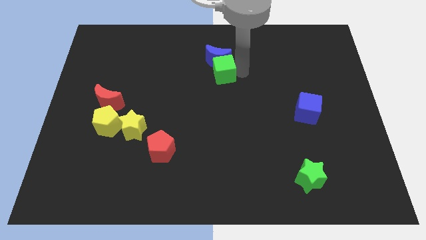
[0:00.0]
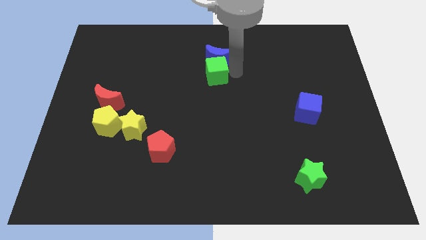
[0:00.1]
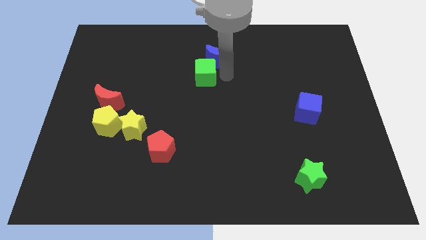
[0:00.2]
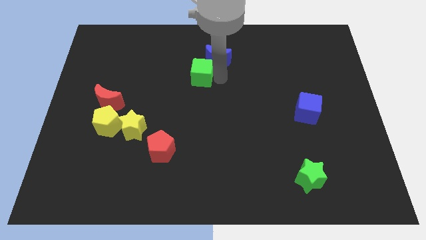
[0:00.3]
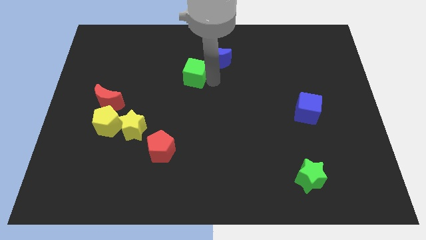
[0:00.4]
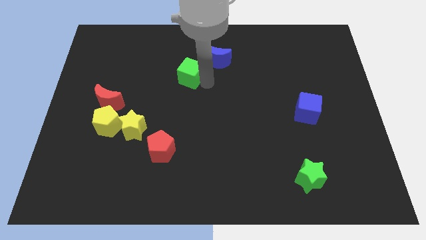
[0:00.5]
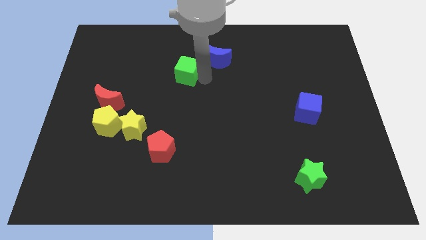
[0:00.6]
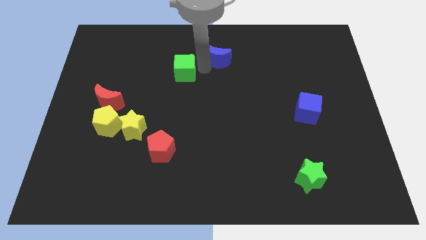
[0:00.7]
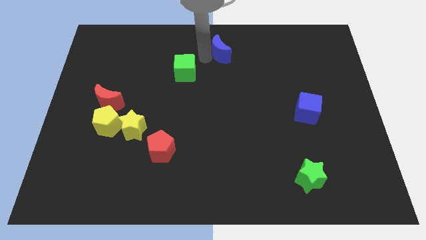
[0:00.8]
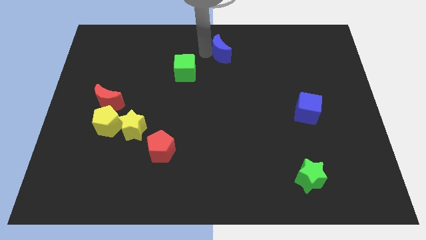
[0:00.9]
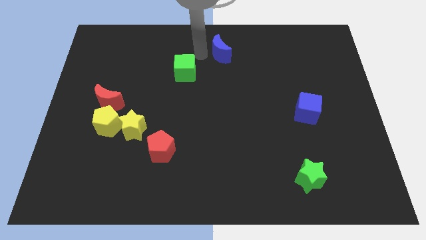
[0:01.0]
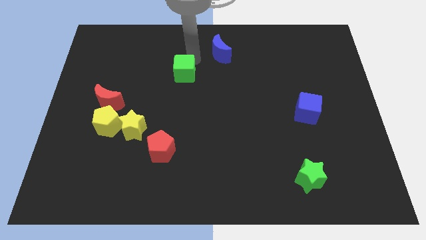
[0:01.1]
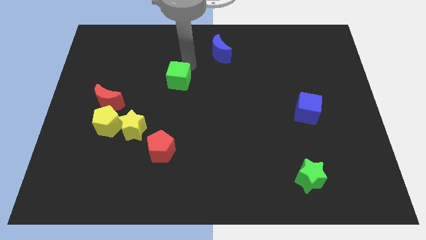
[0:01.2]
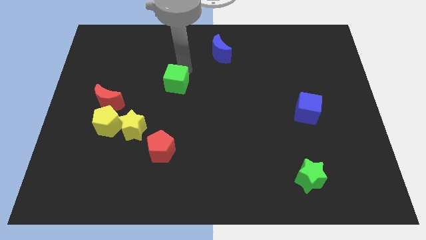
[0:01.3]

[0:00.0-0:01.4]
push green cube away from the blue moon

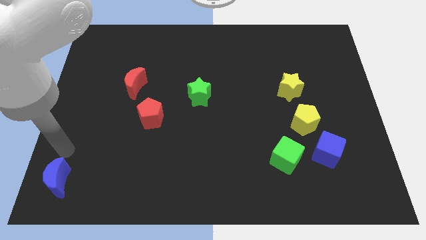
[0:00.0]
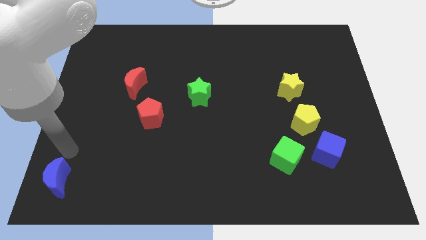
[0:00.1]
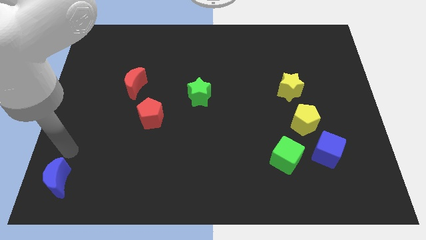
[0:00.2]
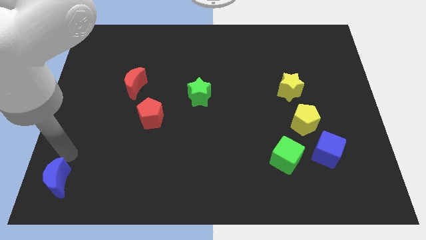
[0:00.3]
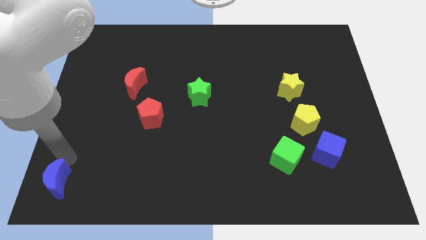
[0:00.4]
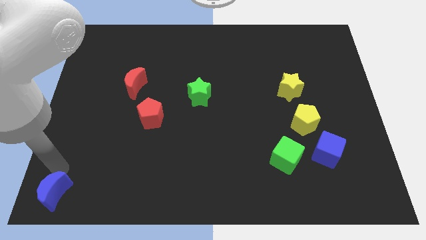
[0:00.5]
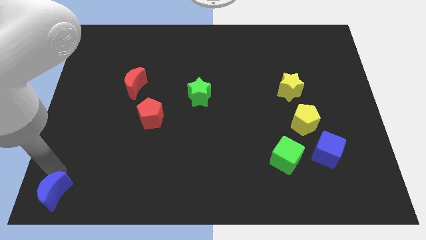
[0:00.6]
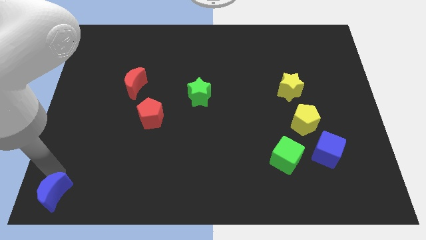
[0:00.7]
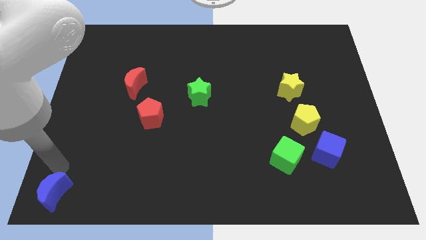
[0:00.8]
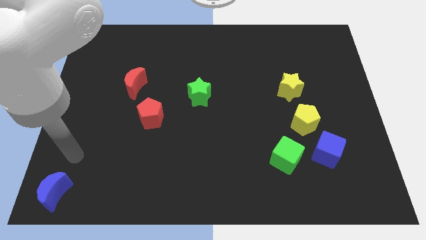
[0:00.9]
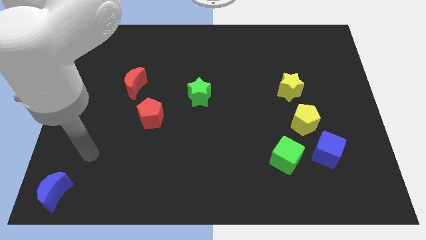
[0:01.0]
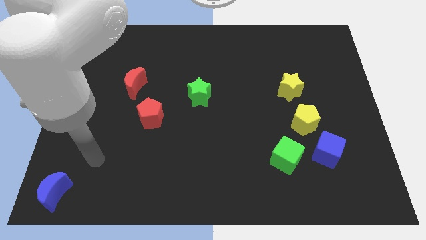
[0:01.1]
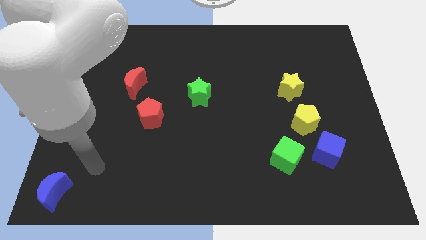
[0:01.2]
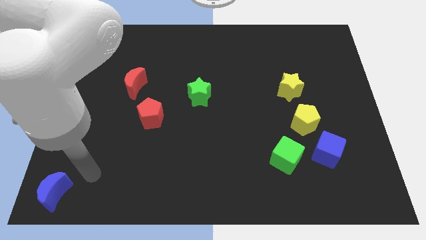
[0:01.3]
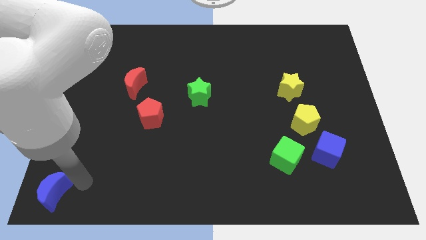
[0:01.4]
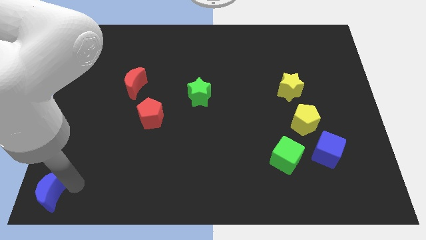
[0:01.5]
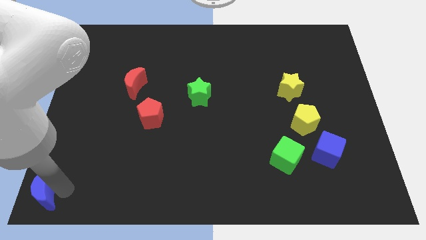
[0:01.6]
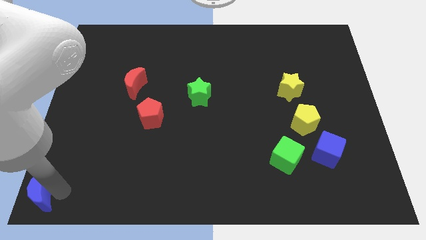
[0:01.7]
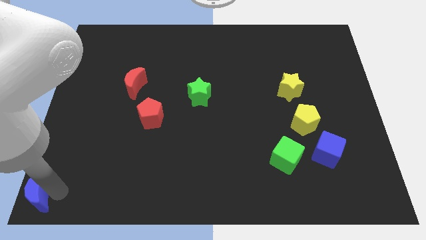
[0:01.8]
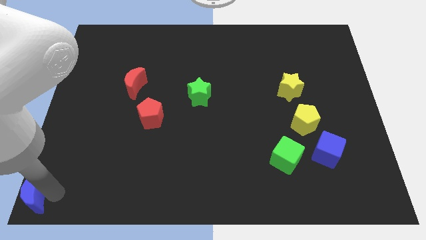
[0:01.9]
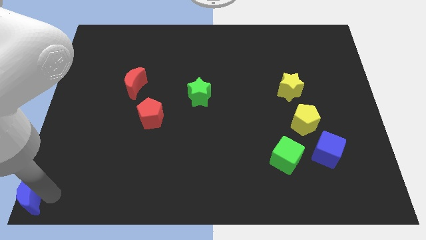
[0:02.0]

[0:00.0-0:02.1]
place blue moon in the bottom left corner

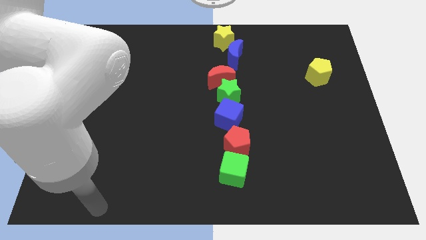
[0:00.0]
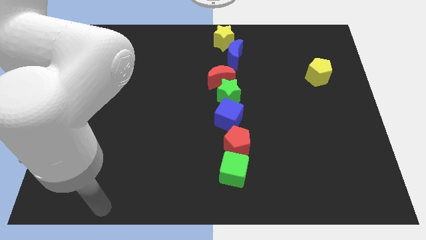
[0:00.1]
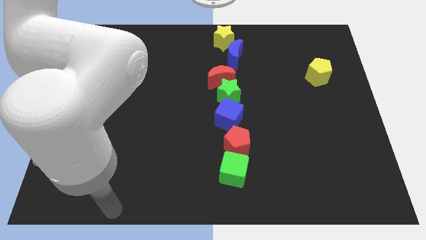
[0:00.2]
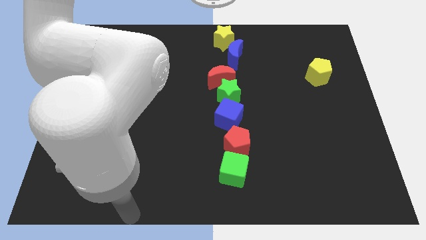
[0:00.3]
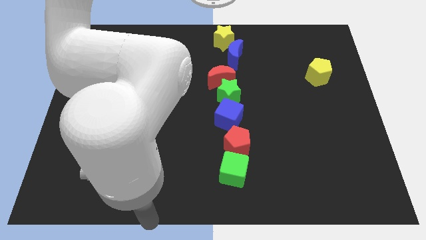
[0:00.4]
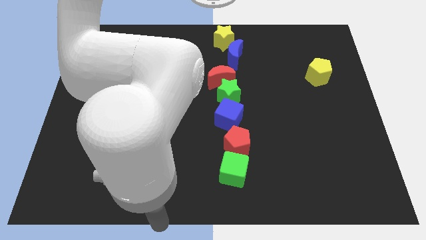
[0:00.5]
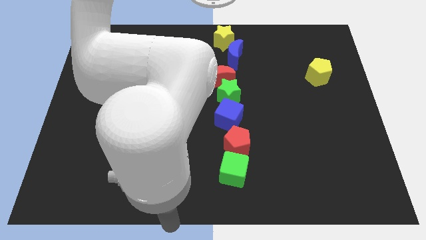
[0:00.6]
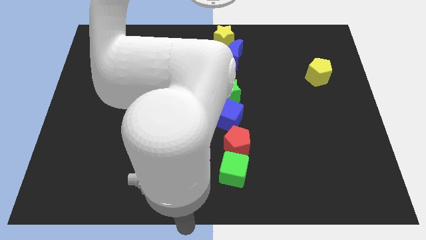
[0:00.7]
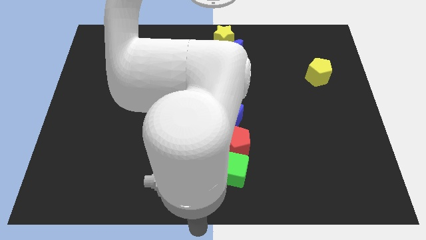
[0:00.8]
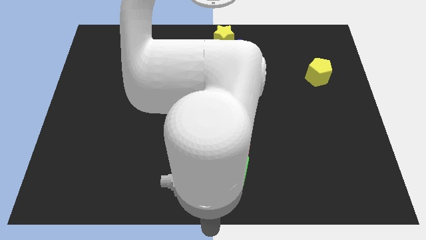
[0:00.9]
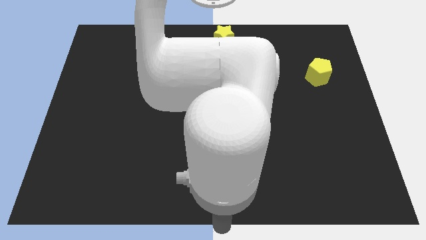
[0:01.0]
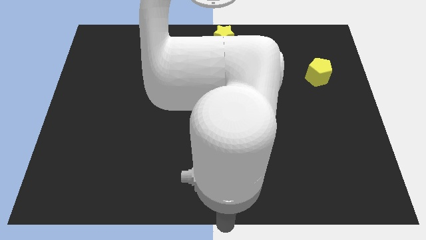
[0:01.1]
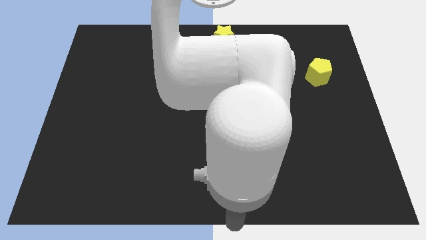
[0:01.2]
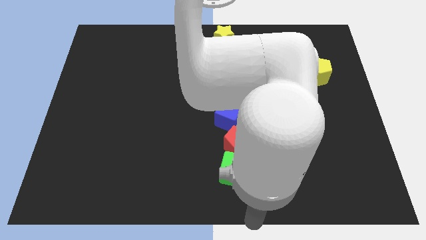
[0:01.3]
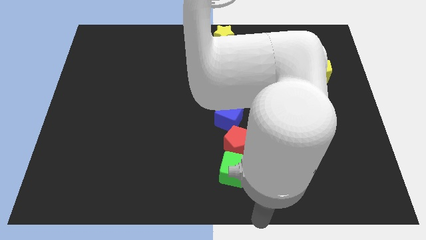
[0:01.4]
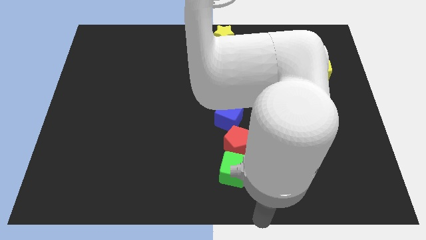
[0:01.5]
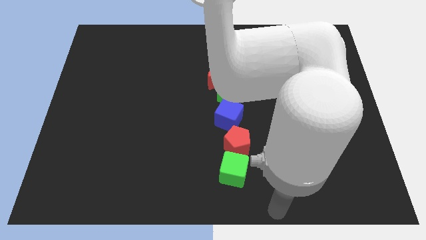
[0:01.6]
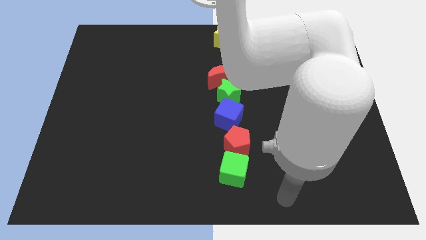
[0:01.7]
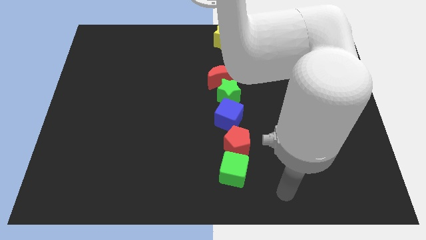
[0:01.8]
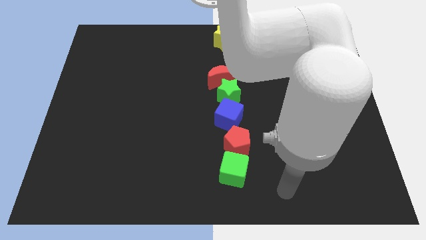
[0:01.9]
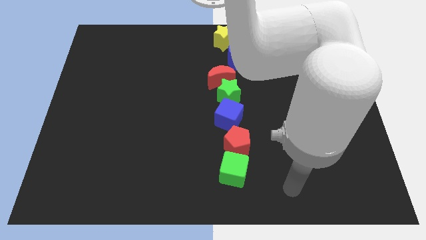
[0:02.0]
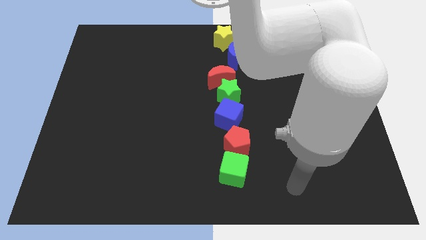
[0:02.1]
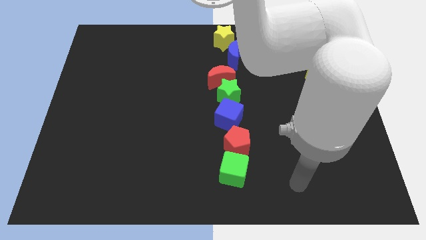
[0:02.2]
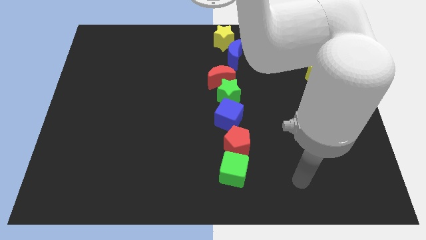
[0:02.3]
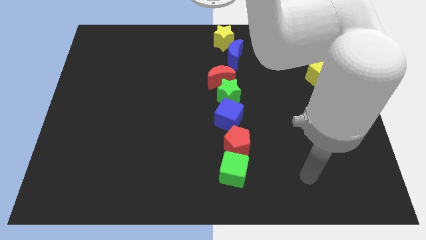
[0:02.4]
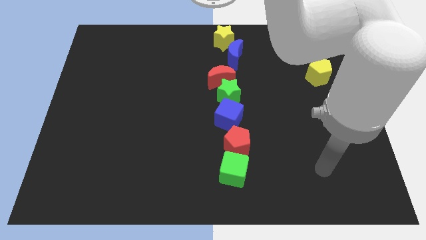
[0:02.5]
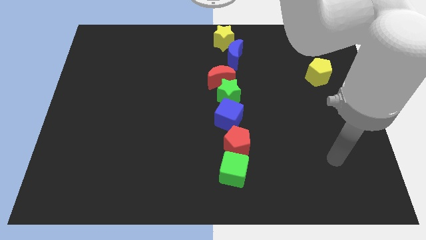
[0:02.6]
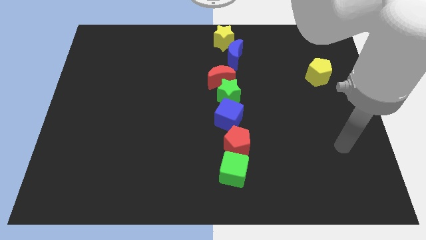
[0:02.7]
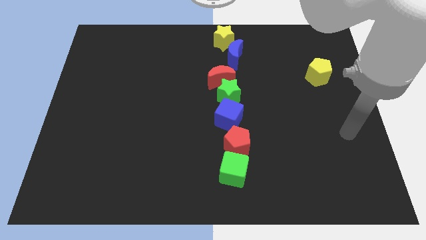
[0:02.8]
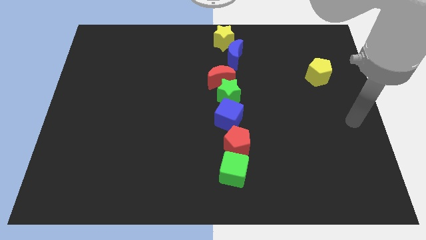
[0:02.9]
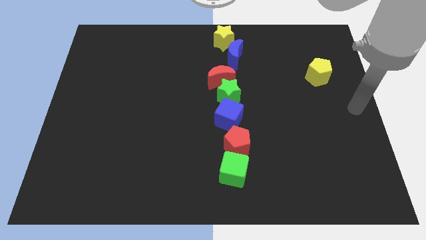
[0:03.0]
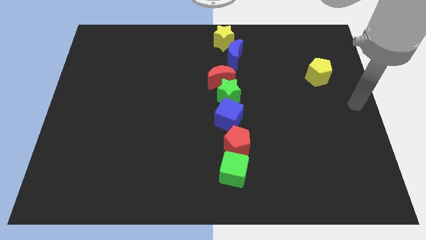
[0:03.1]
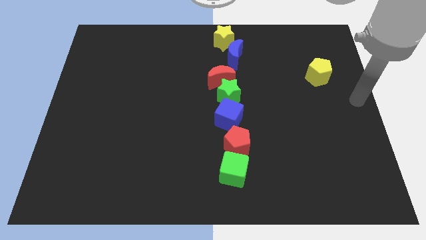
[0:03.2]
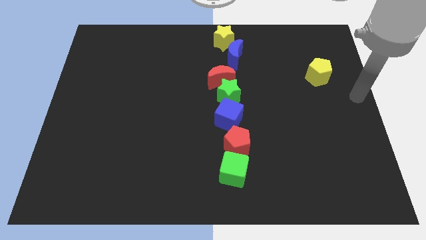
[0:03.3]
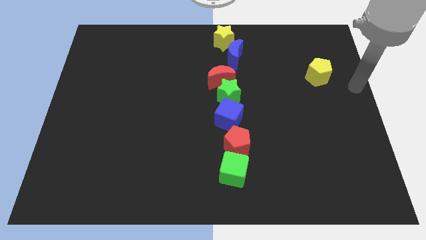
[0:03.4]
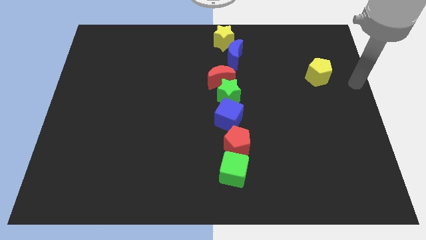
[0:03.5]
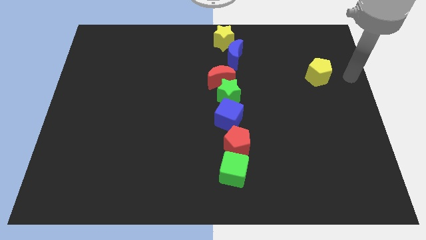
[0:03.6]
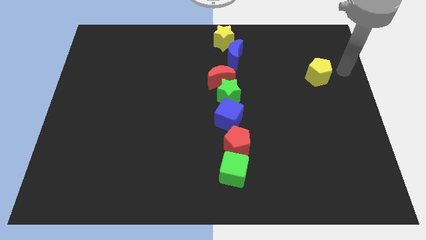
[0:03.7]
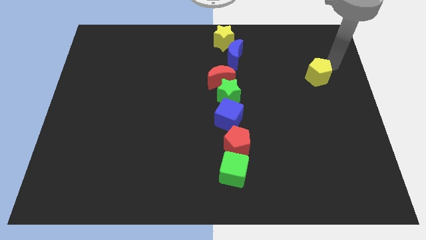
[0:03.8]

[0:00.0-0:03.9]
move your arm at the top right of the yellow pentagon

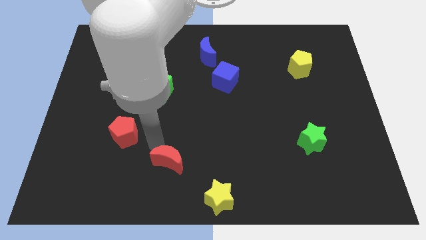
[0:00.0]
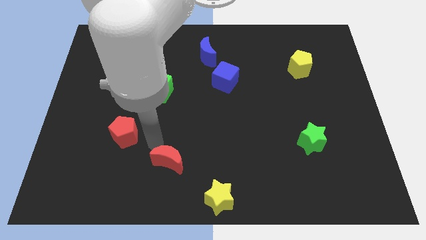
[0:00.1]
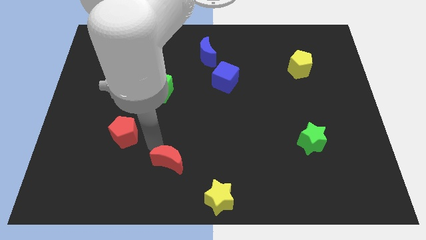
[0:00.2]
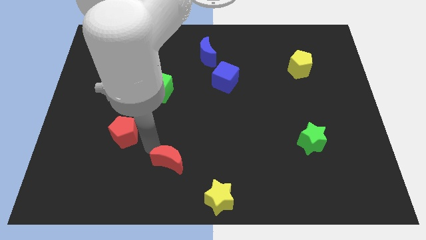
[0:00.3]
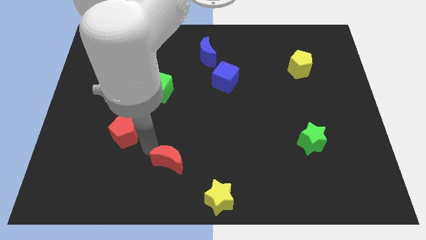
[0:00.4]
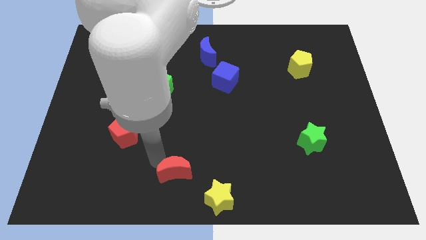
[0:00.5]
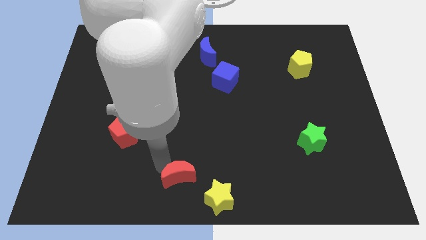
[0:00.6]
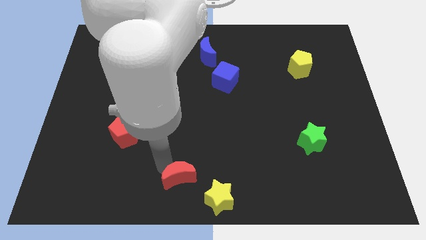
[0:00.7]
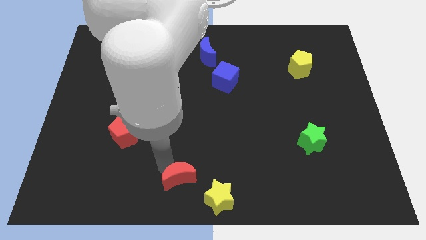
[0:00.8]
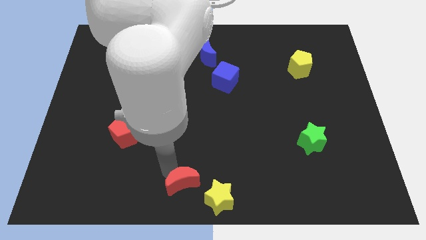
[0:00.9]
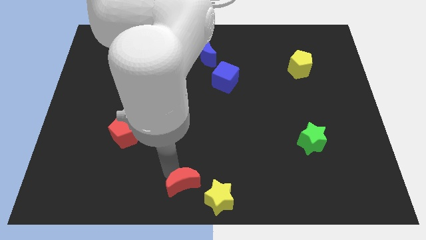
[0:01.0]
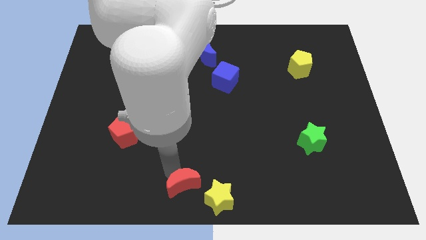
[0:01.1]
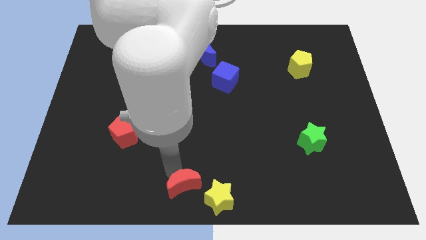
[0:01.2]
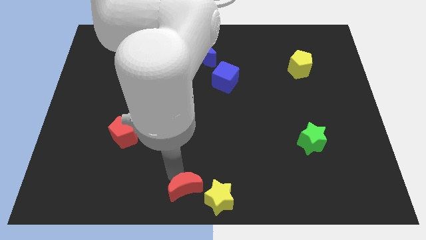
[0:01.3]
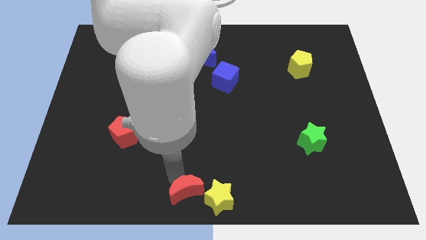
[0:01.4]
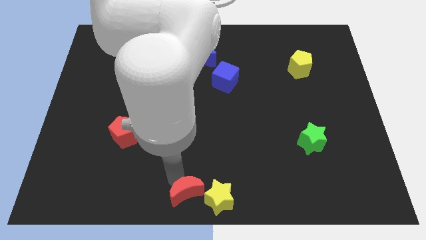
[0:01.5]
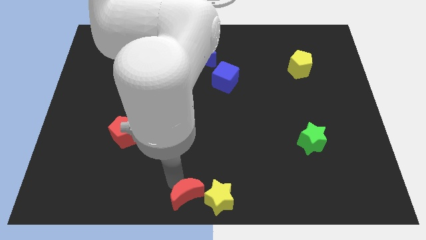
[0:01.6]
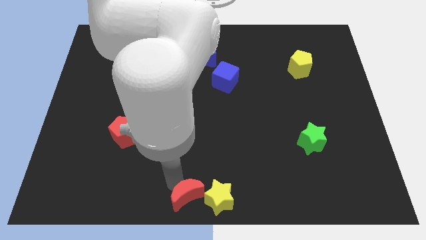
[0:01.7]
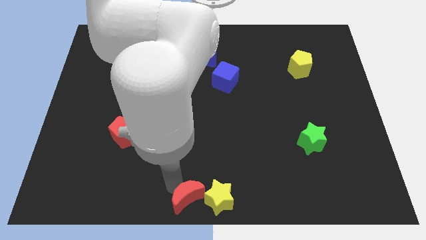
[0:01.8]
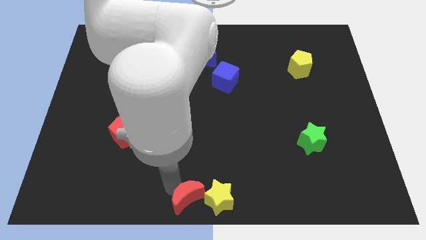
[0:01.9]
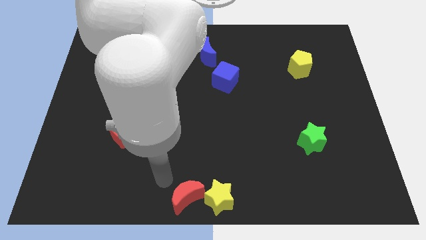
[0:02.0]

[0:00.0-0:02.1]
push the red crescent close to the left side of the yellow star
